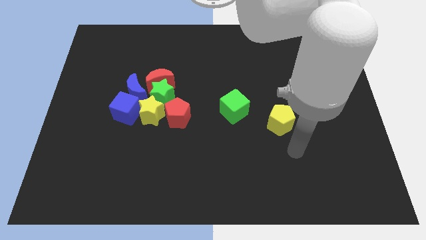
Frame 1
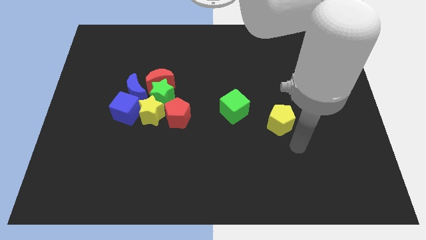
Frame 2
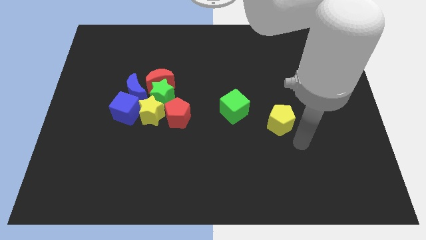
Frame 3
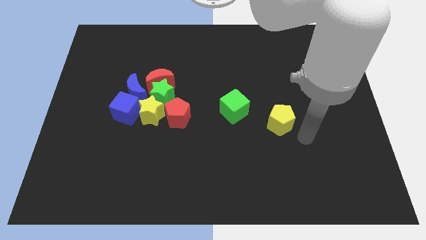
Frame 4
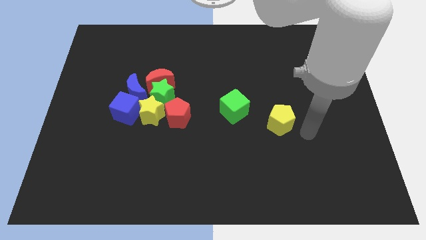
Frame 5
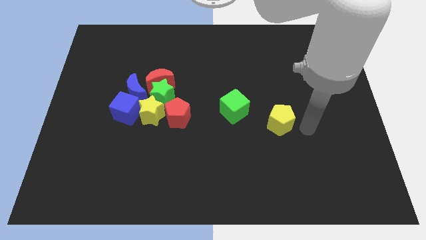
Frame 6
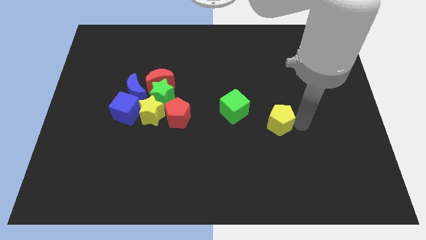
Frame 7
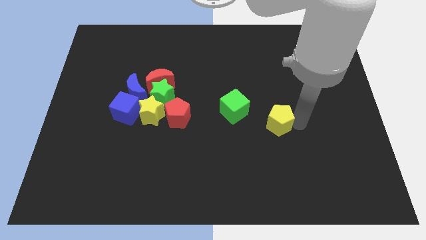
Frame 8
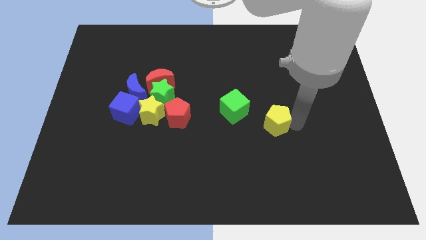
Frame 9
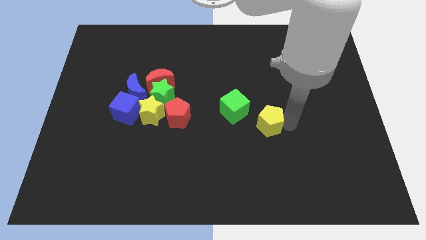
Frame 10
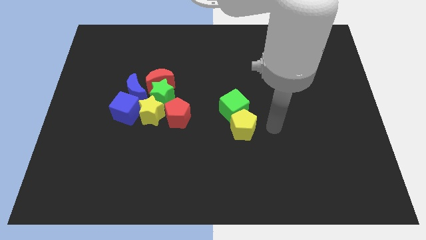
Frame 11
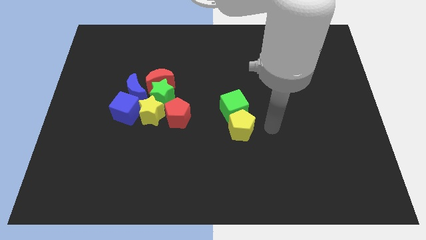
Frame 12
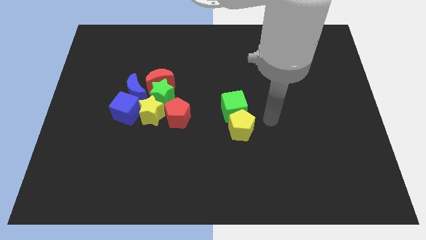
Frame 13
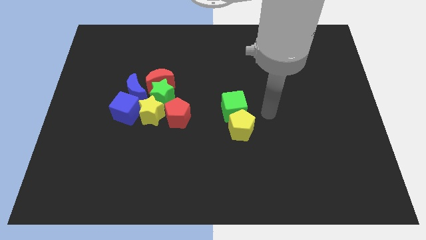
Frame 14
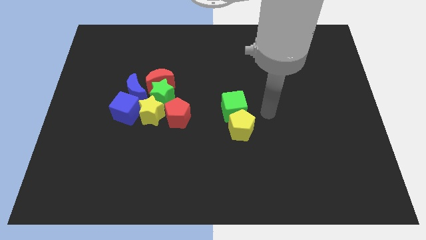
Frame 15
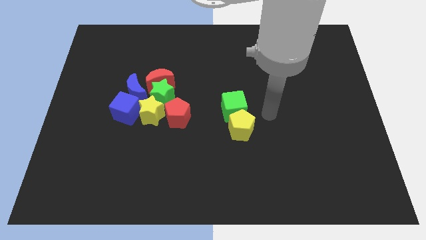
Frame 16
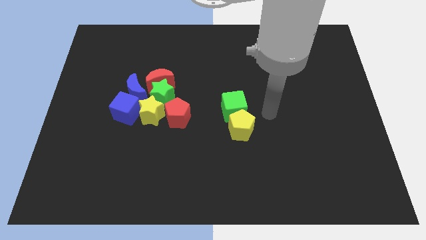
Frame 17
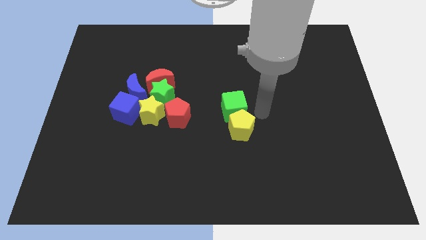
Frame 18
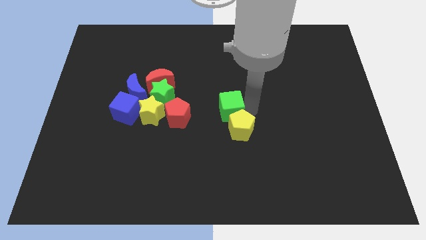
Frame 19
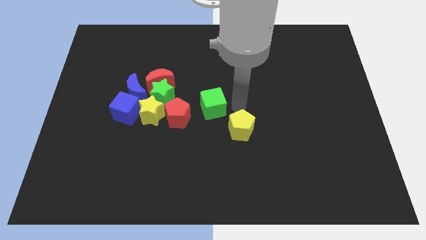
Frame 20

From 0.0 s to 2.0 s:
slide the yellow pentagon below the green cube

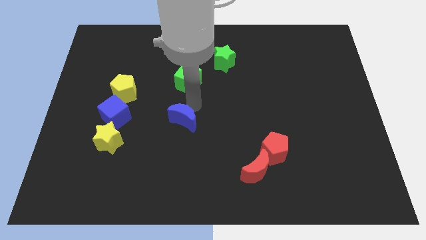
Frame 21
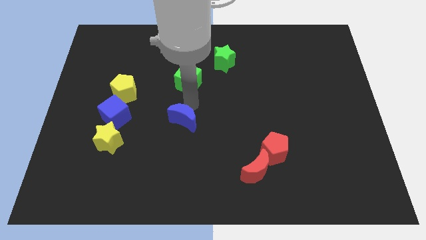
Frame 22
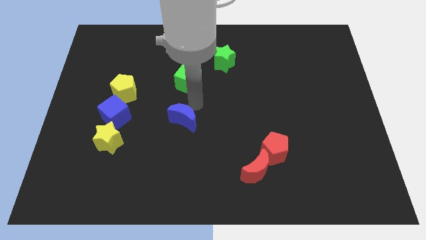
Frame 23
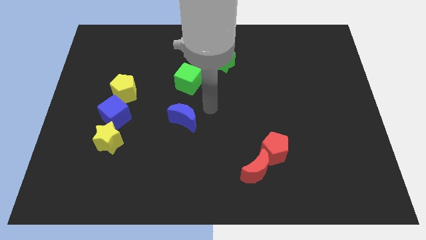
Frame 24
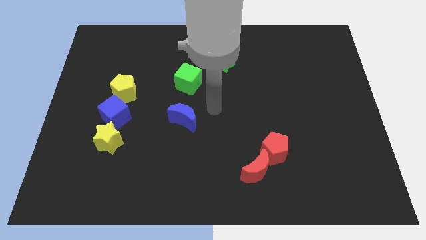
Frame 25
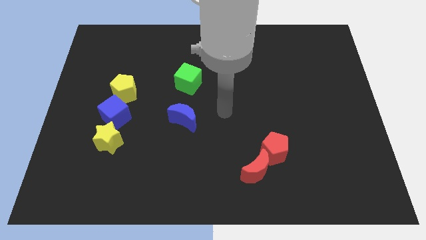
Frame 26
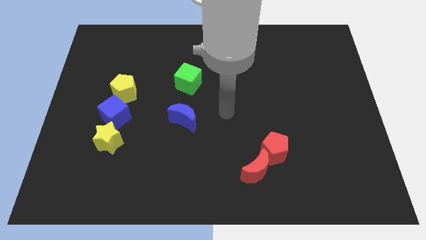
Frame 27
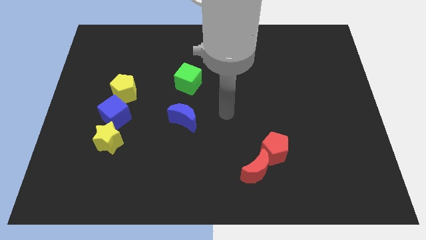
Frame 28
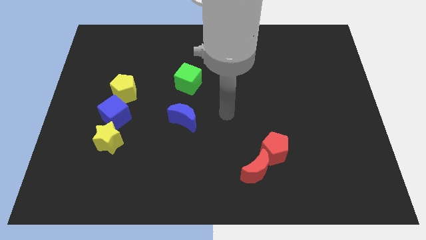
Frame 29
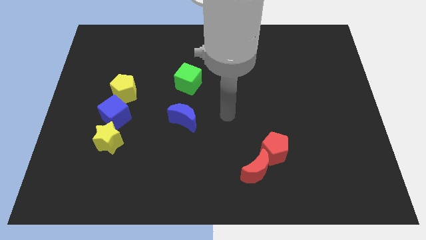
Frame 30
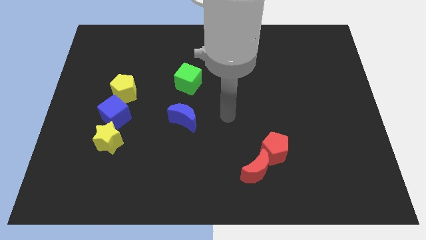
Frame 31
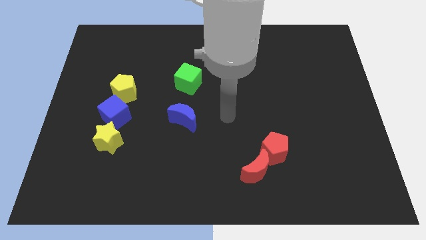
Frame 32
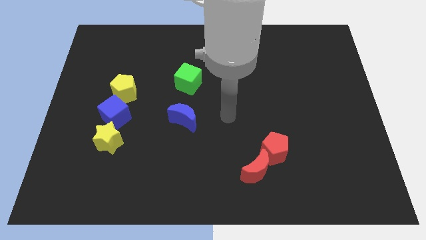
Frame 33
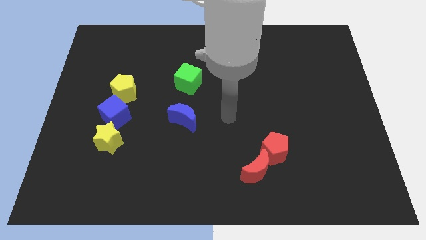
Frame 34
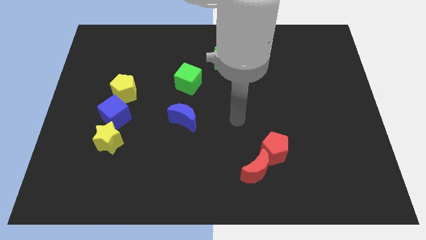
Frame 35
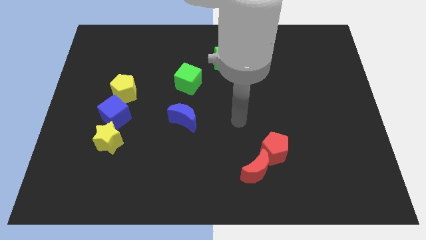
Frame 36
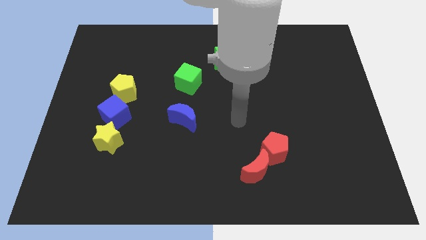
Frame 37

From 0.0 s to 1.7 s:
move your arm away from blue moon

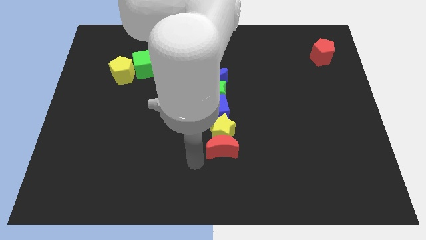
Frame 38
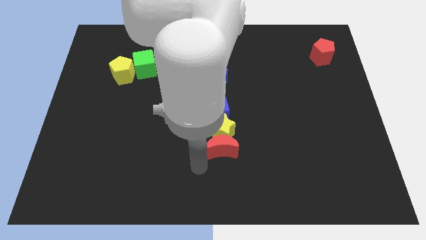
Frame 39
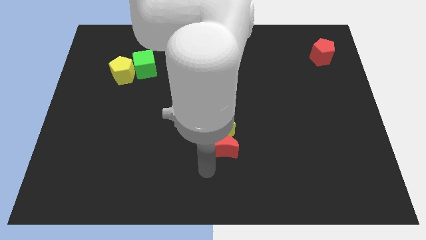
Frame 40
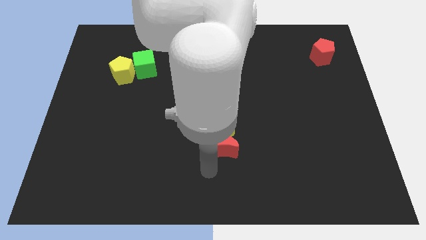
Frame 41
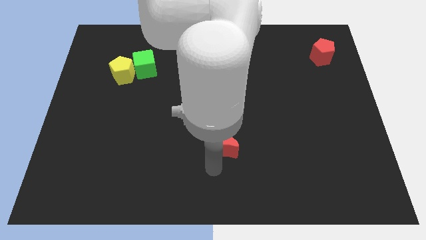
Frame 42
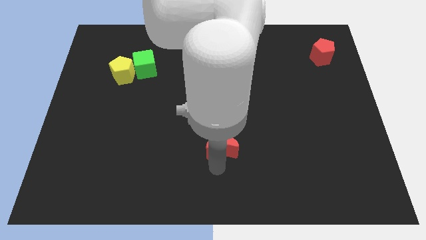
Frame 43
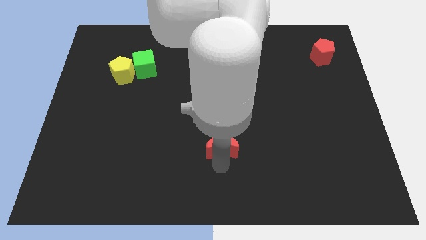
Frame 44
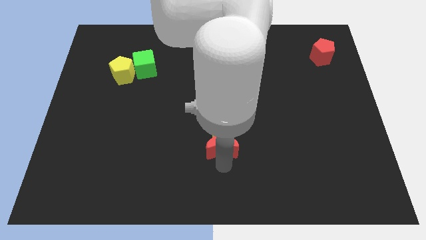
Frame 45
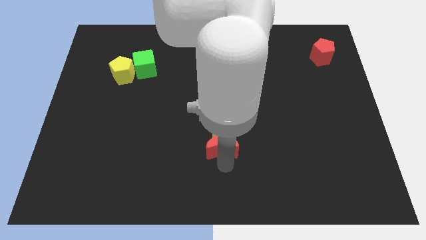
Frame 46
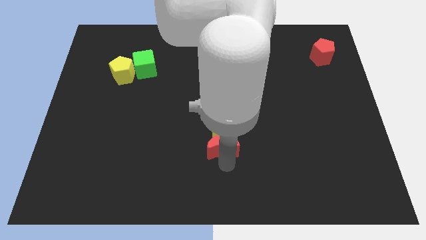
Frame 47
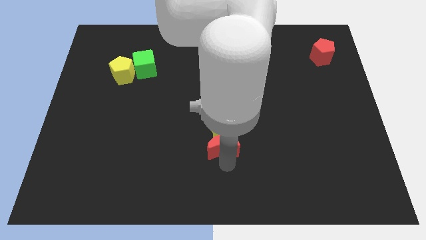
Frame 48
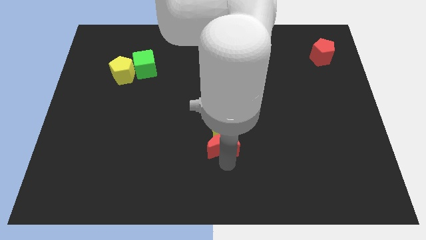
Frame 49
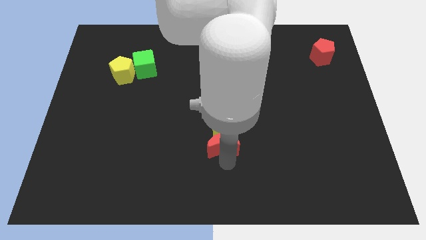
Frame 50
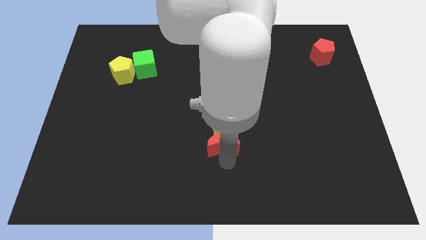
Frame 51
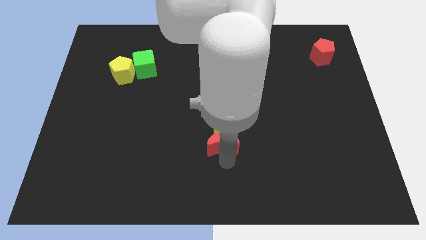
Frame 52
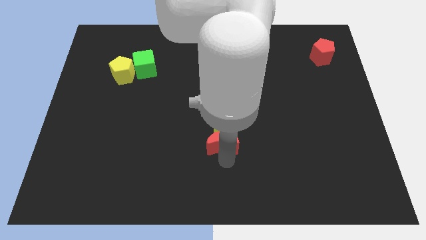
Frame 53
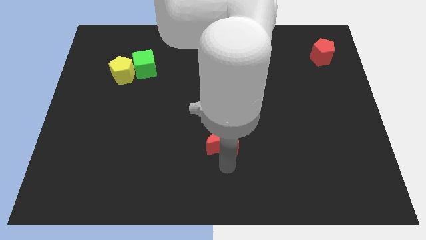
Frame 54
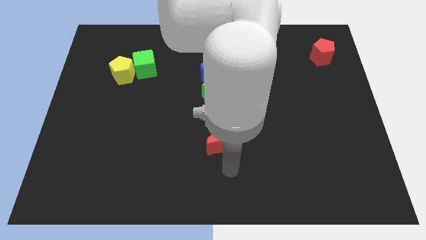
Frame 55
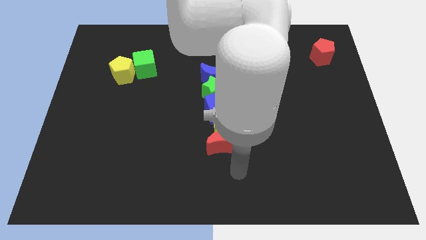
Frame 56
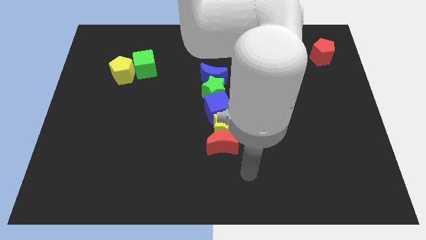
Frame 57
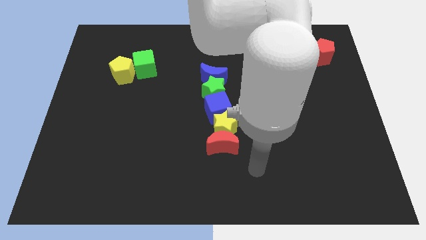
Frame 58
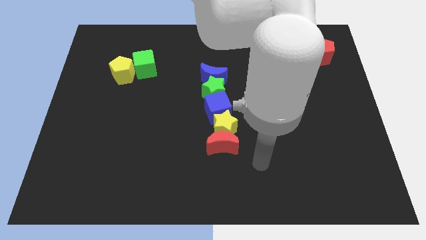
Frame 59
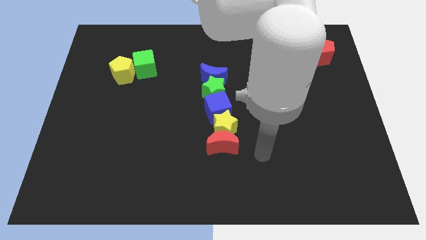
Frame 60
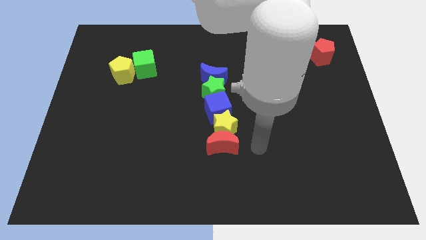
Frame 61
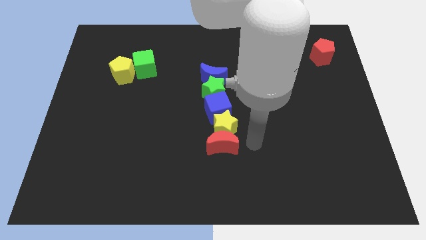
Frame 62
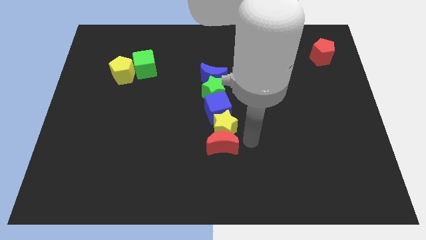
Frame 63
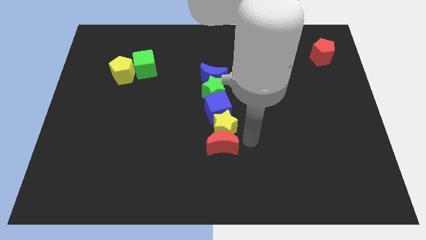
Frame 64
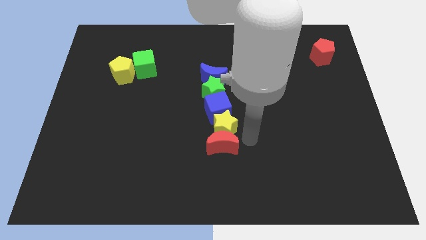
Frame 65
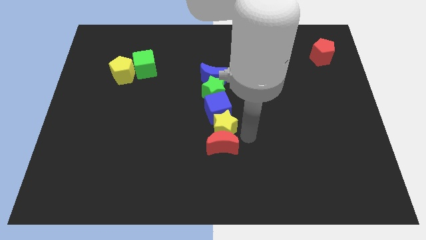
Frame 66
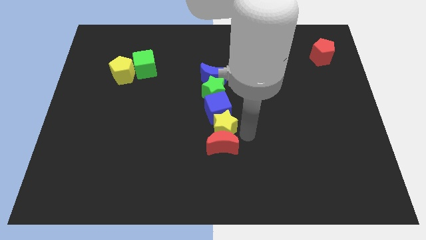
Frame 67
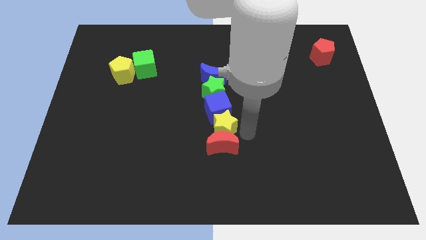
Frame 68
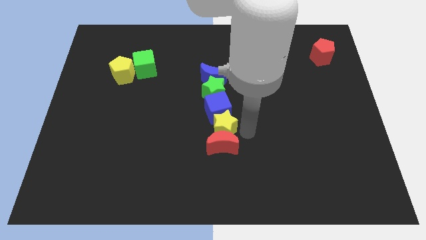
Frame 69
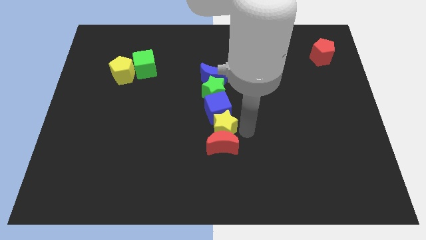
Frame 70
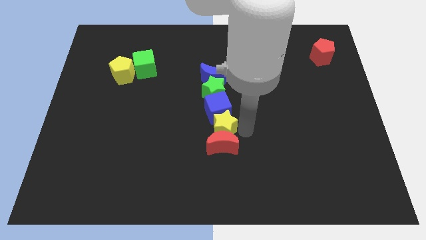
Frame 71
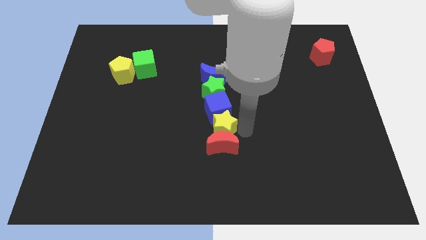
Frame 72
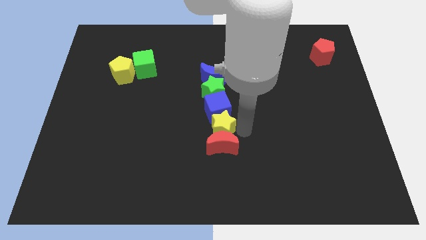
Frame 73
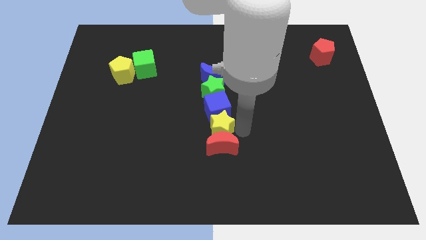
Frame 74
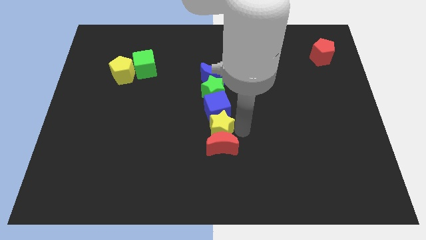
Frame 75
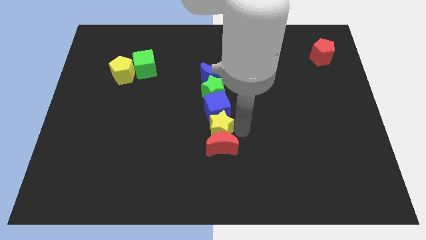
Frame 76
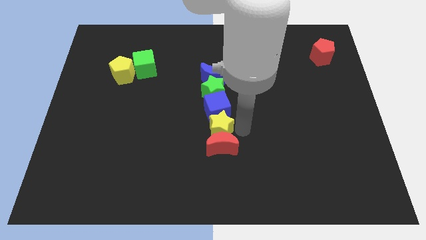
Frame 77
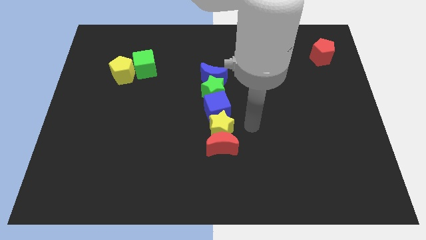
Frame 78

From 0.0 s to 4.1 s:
place the red crescent and yellow star in a vertical line to the bottom of the blue cube

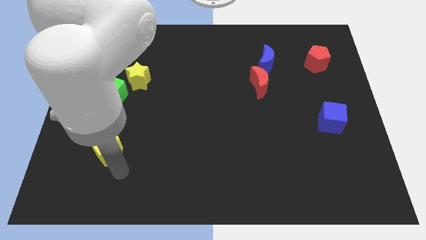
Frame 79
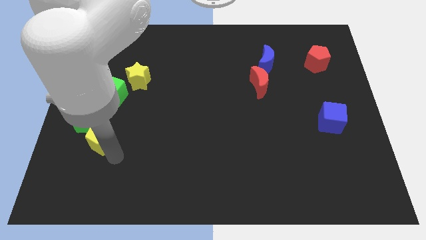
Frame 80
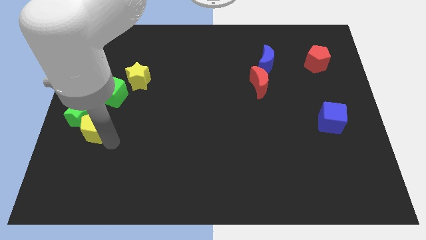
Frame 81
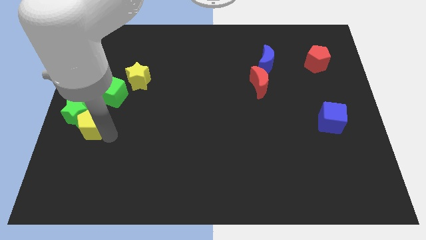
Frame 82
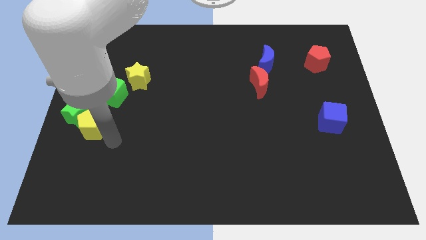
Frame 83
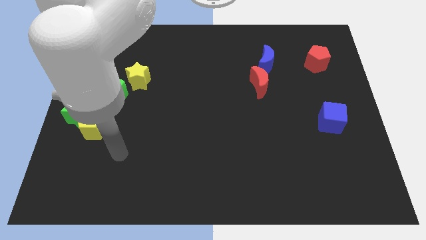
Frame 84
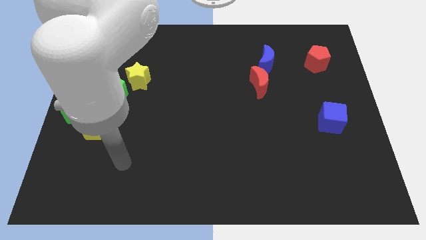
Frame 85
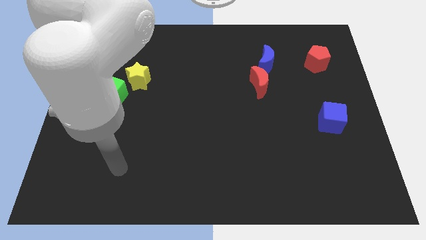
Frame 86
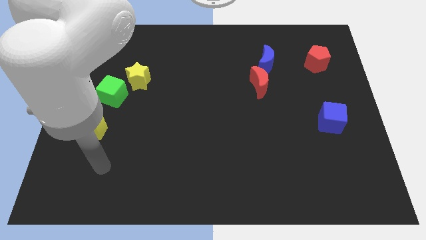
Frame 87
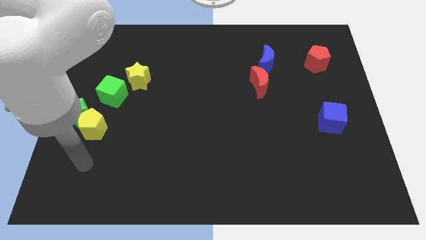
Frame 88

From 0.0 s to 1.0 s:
move the yellow pentagon into the green star to the left center

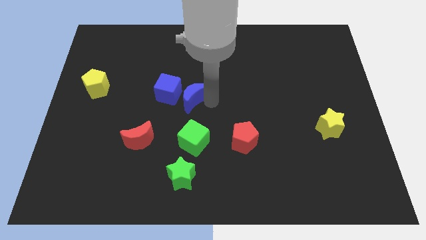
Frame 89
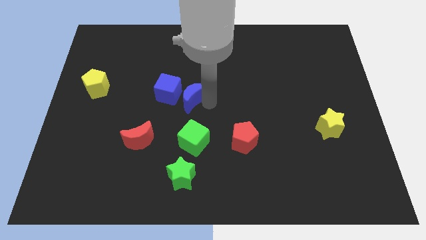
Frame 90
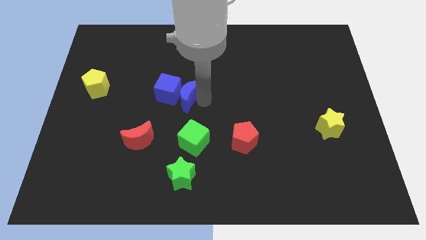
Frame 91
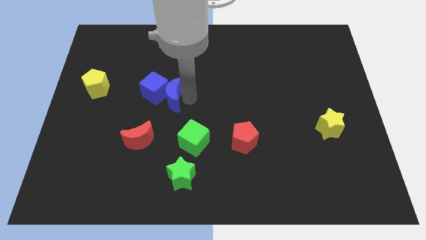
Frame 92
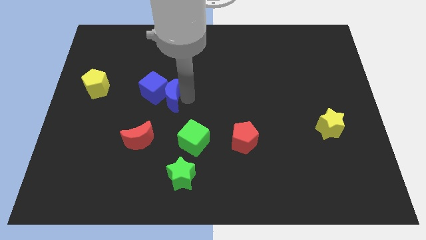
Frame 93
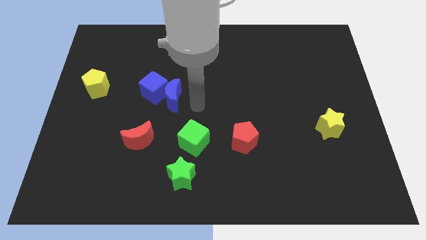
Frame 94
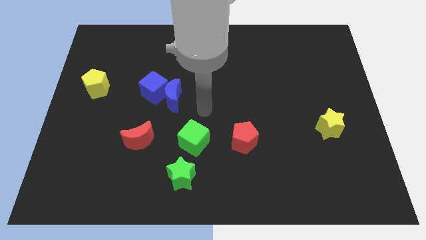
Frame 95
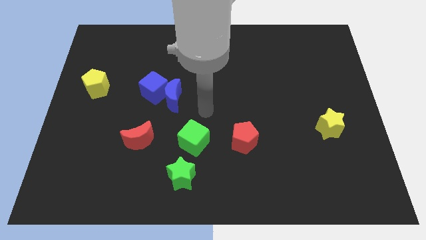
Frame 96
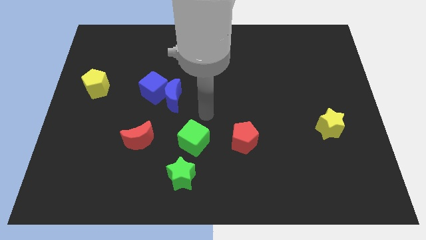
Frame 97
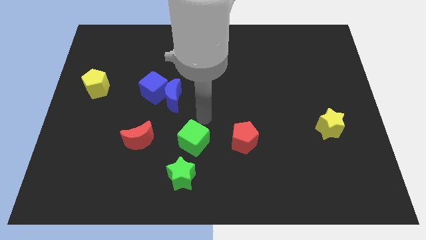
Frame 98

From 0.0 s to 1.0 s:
slightly push the blue blocks towards the left side
